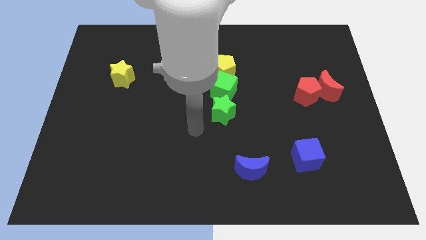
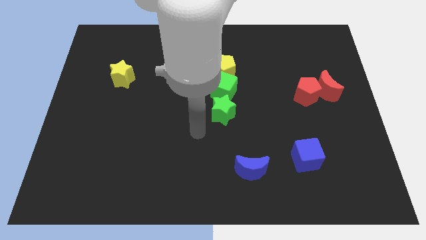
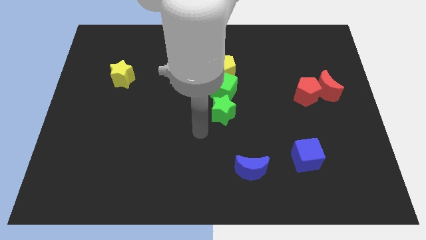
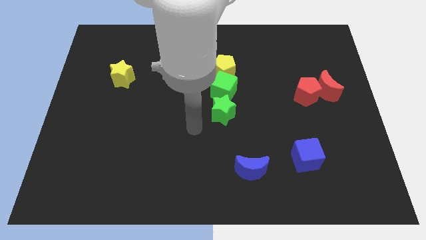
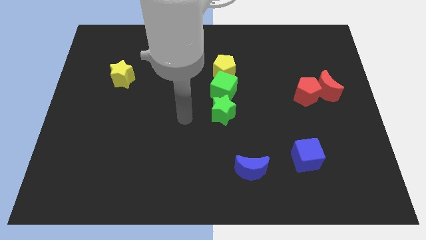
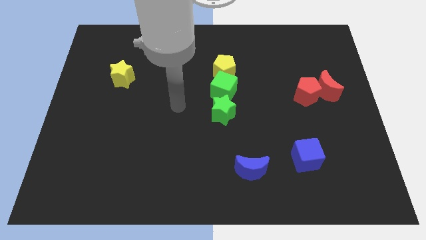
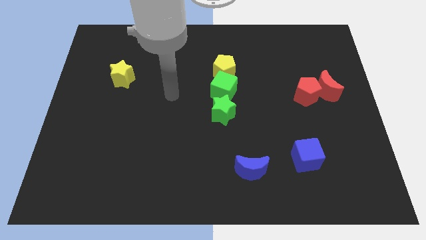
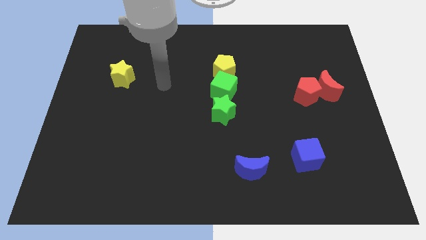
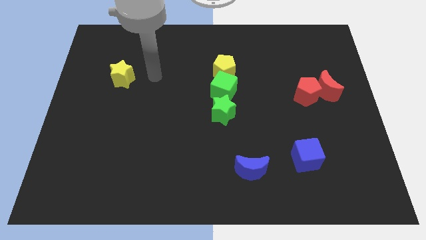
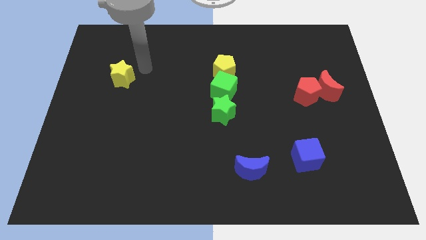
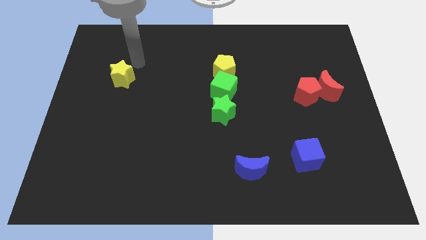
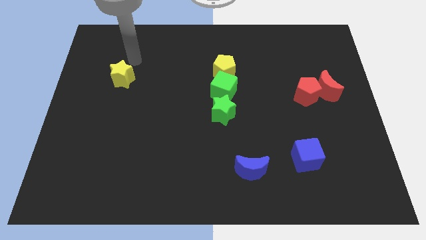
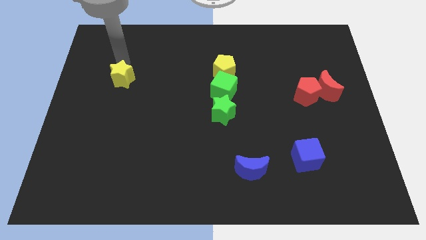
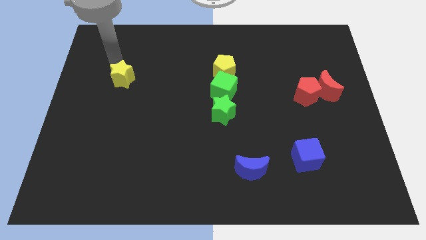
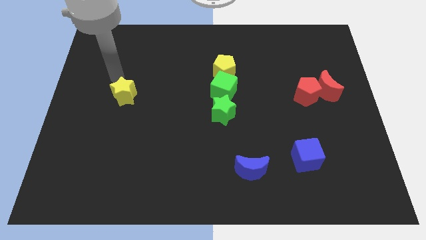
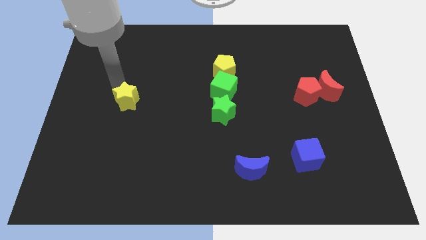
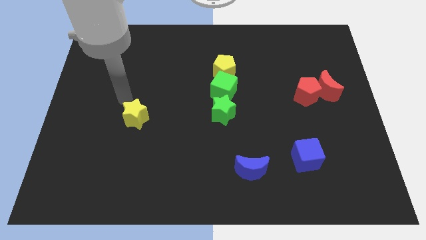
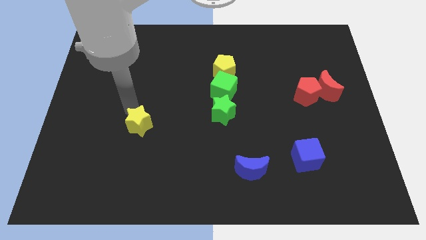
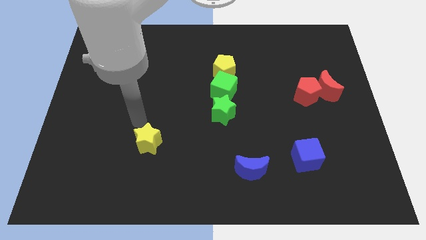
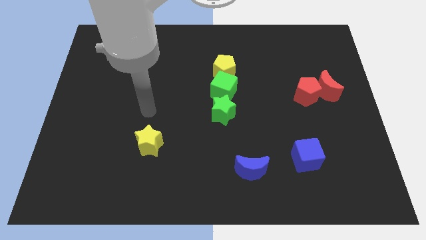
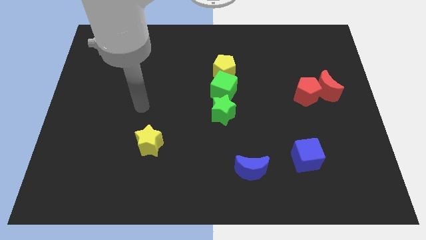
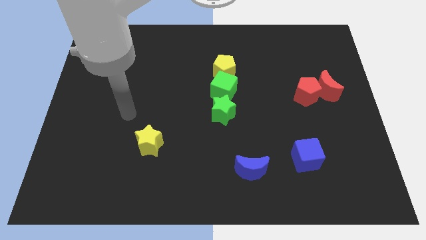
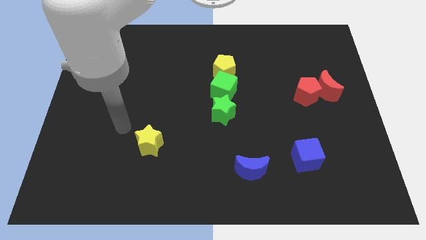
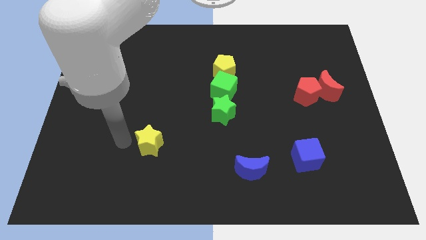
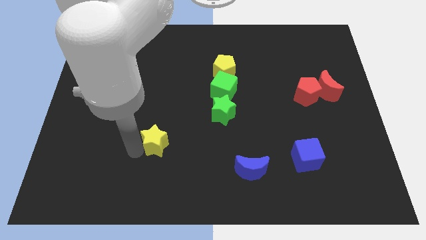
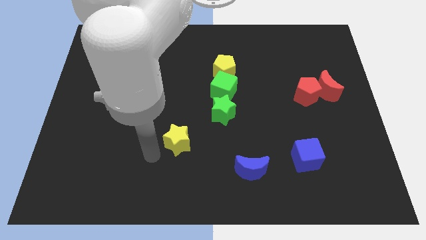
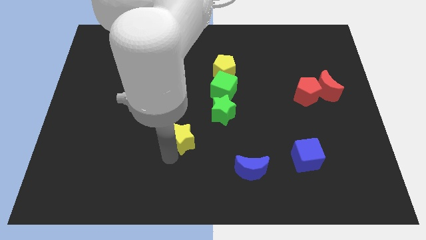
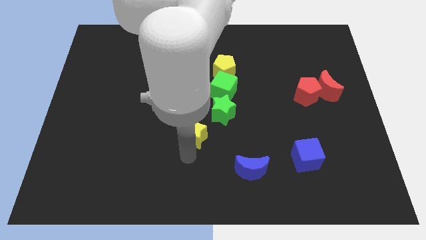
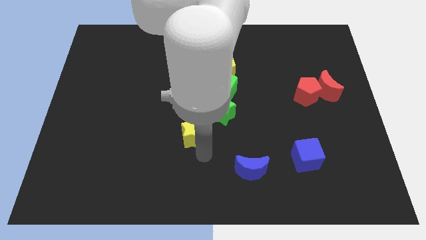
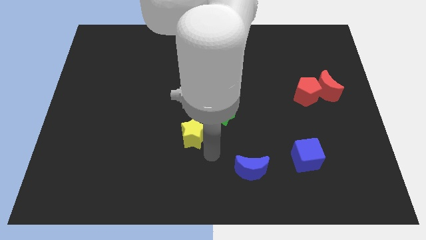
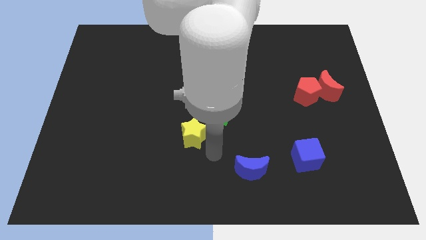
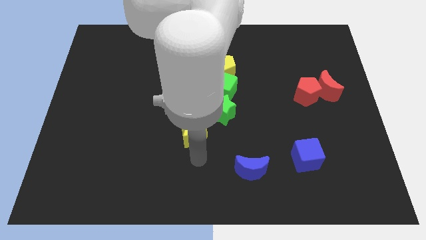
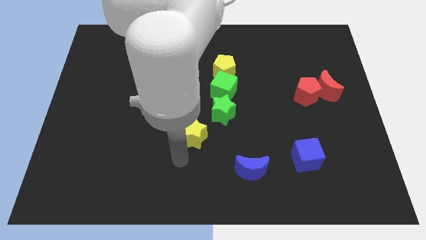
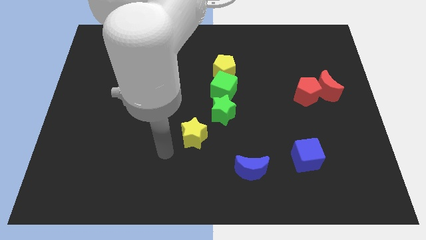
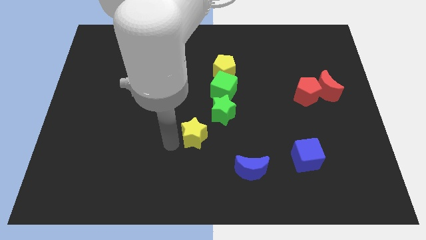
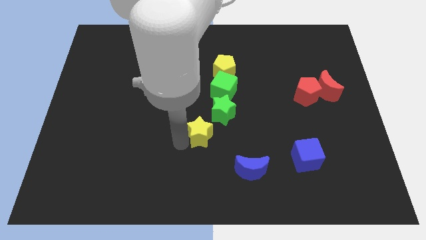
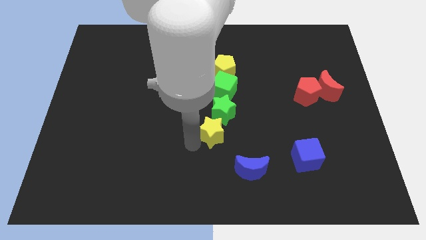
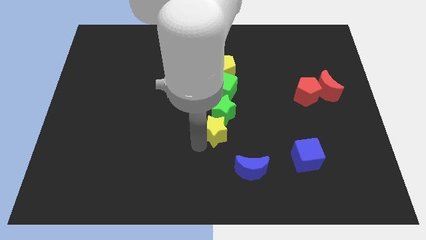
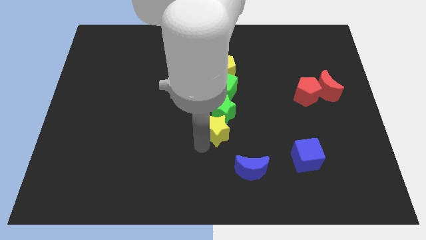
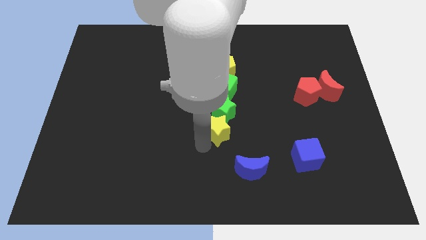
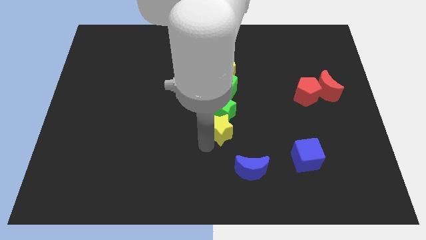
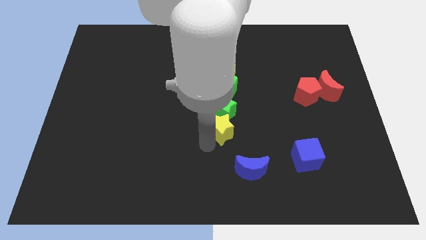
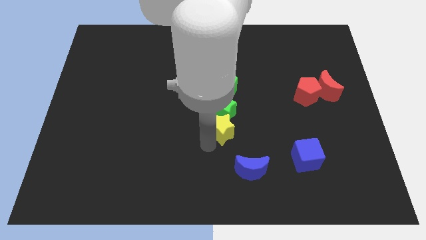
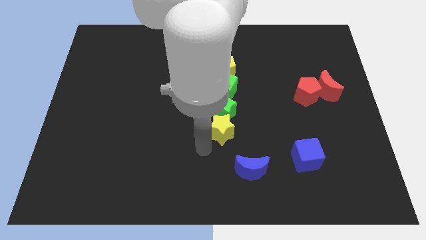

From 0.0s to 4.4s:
move the yellow star below the green star

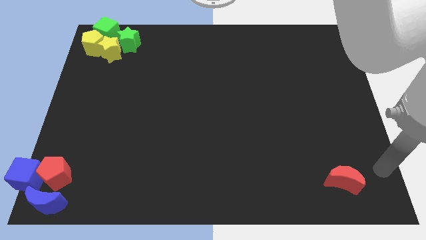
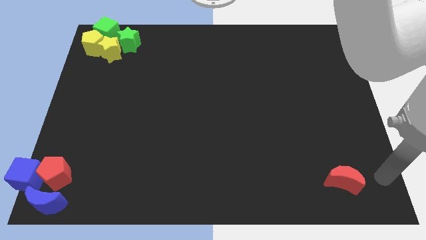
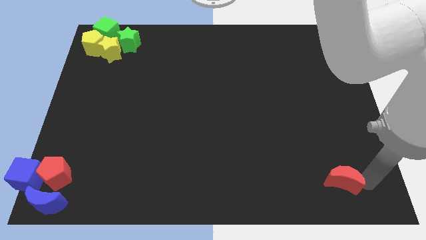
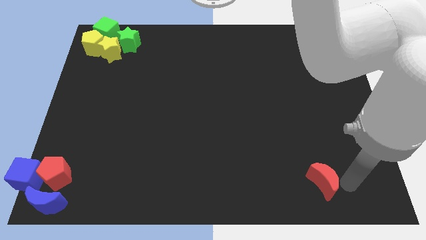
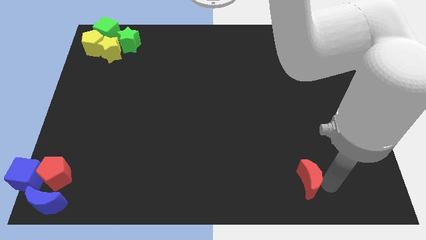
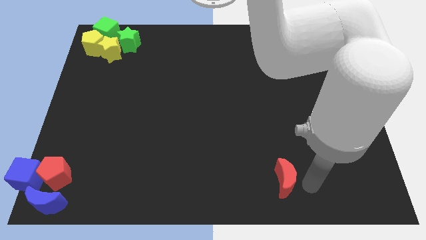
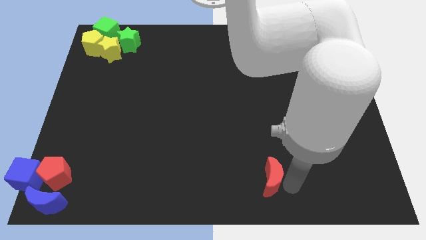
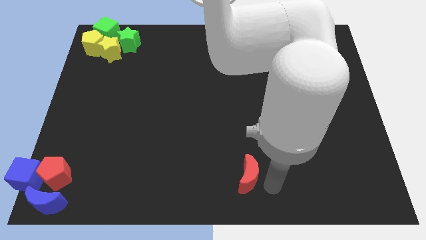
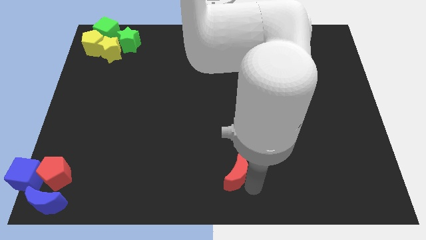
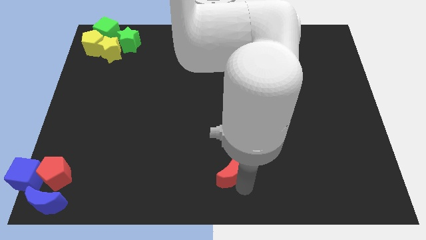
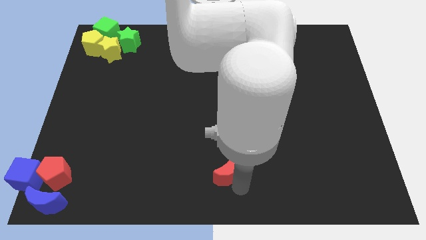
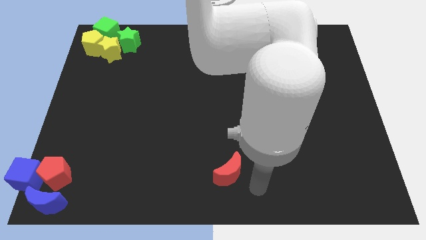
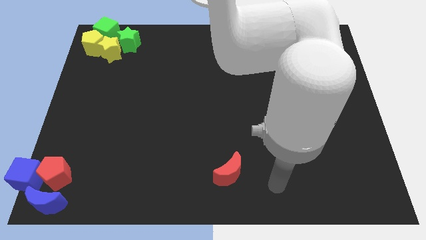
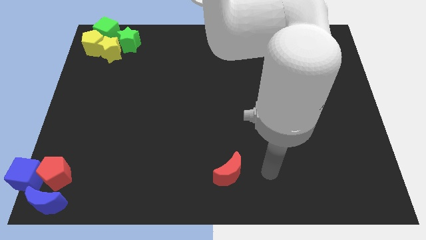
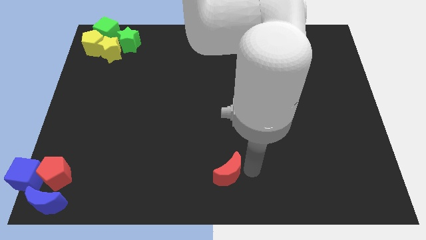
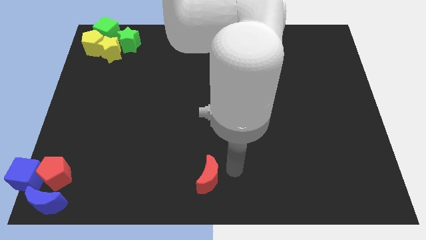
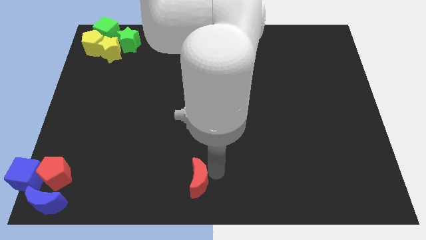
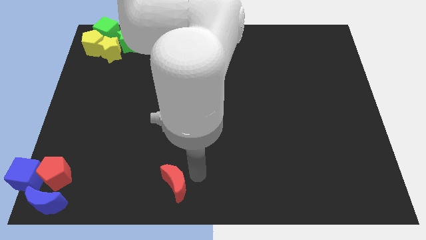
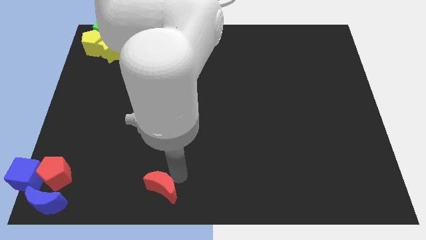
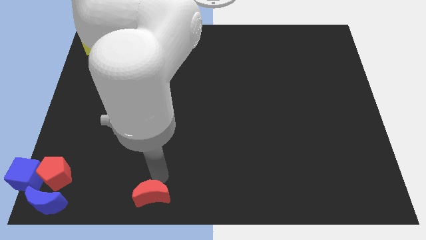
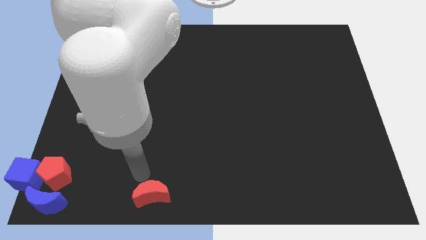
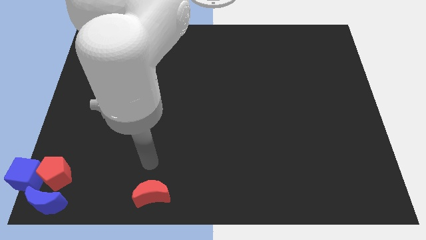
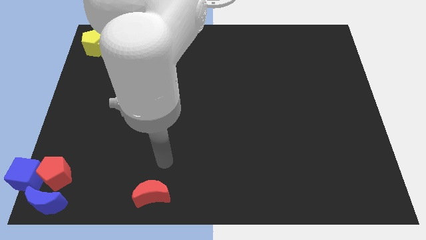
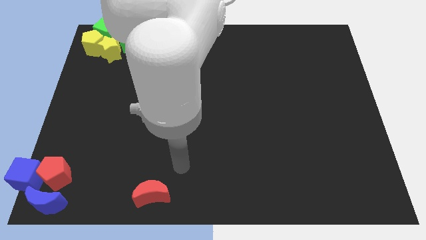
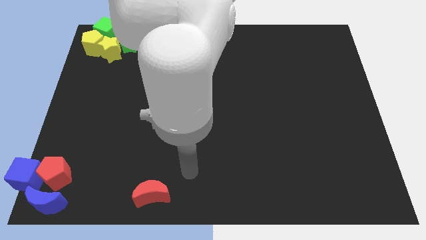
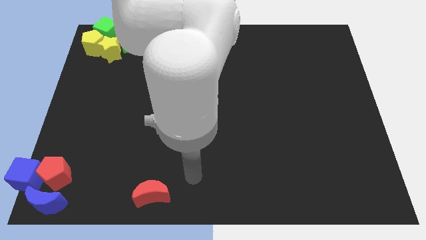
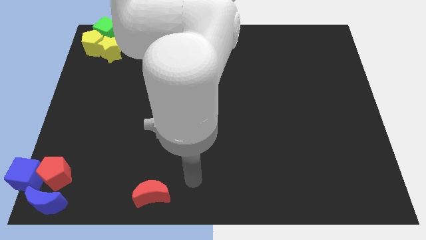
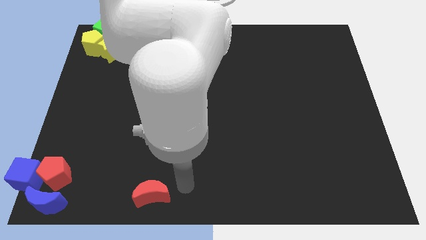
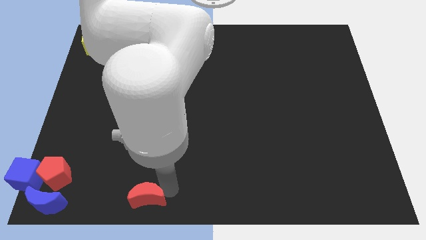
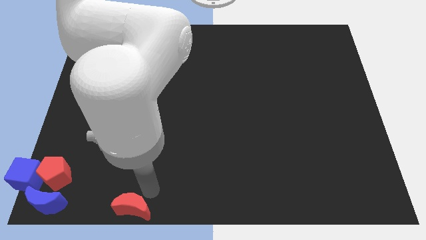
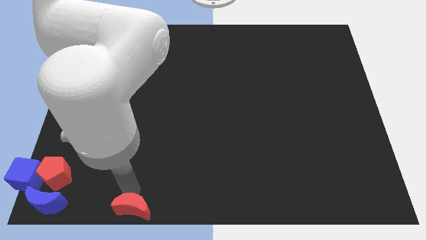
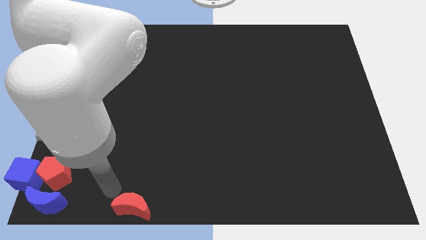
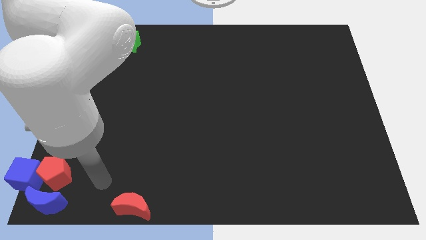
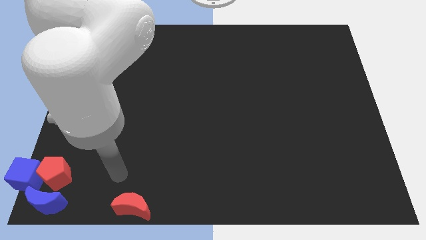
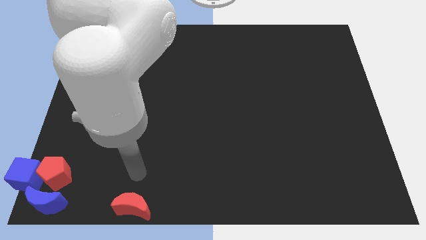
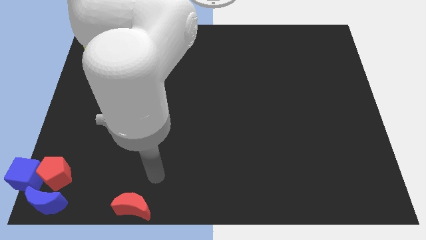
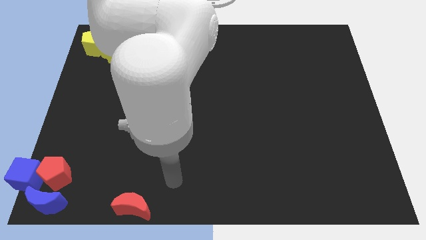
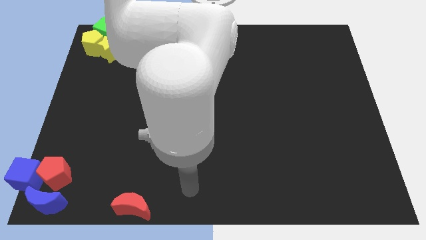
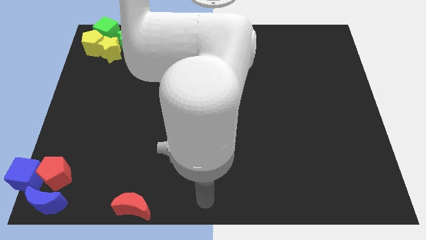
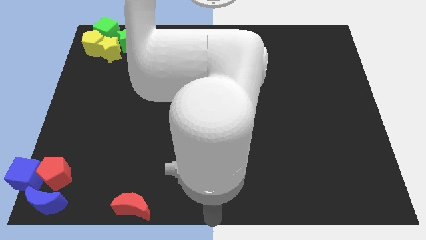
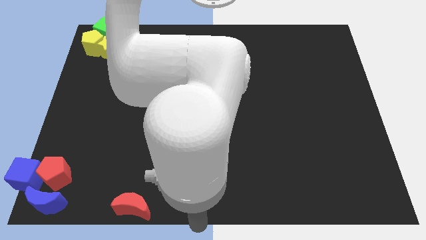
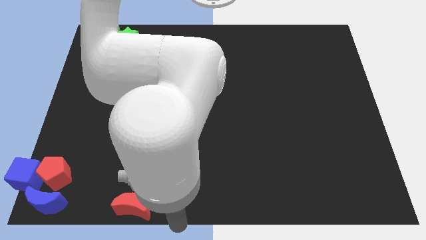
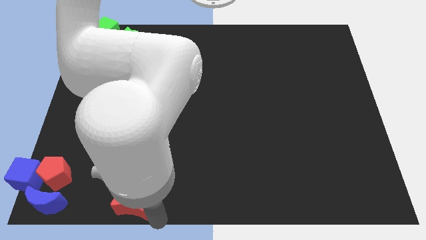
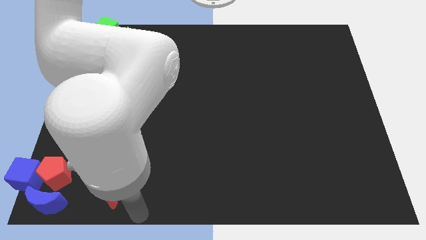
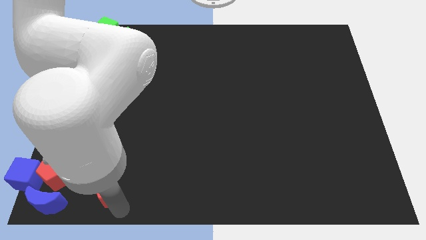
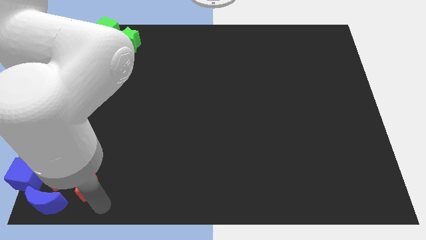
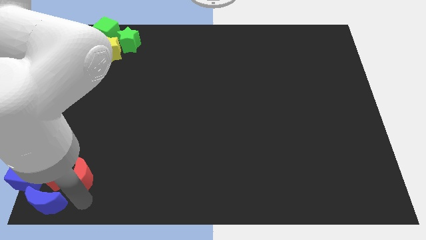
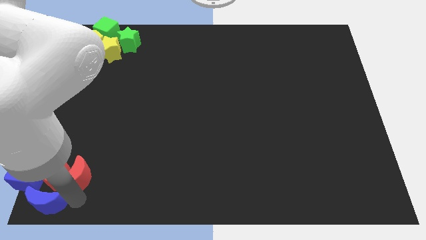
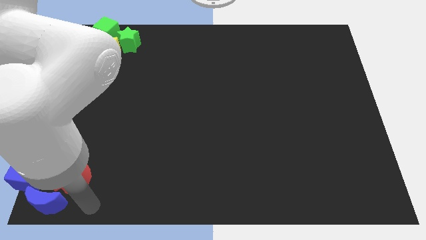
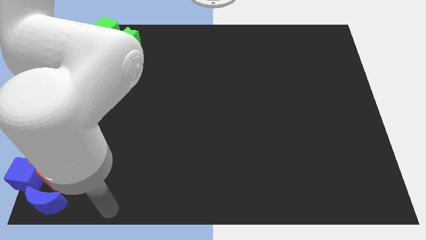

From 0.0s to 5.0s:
group up the red blocks at the bottom left corner
